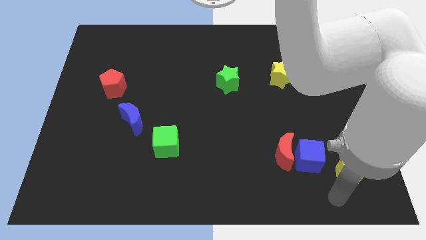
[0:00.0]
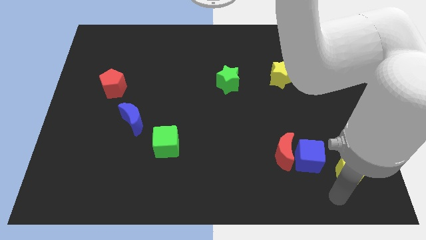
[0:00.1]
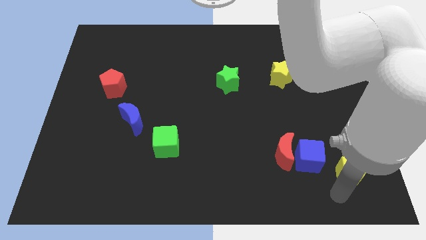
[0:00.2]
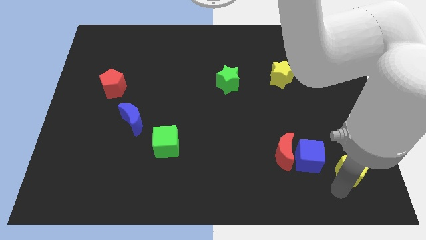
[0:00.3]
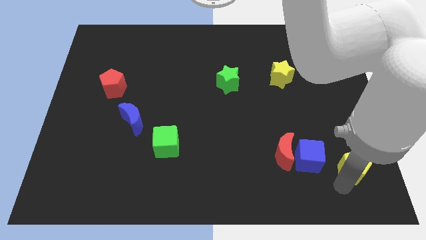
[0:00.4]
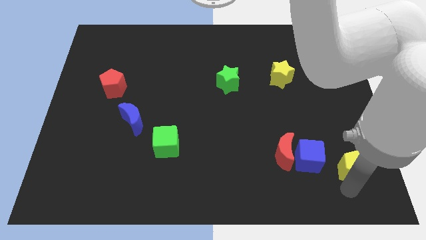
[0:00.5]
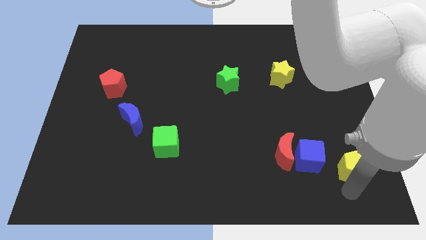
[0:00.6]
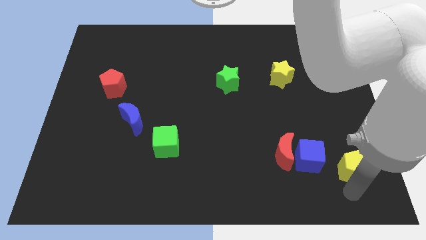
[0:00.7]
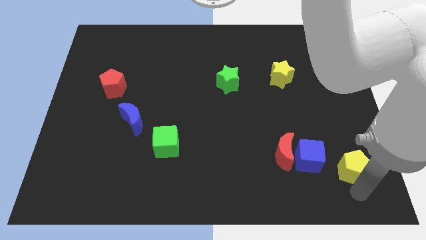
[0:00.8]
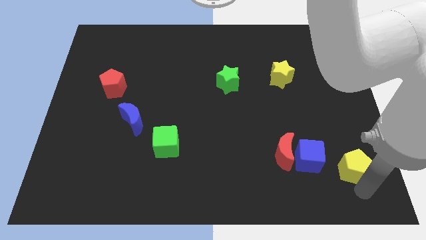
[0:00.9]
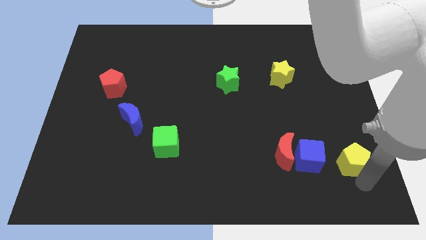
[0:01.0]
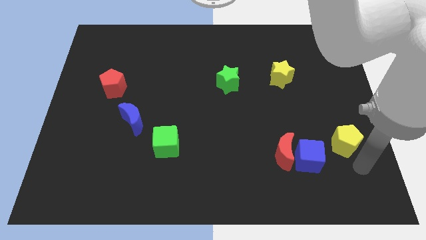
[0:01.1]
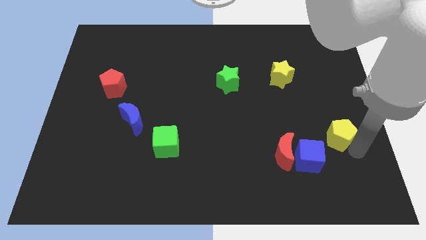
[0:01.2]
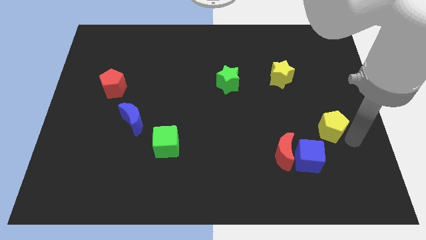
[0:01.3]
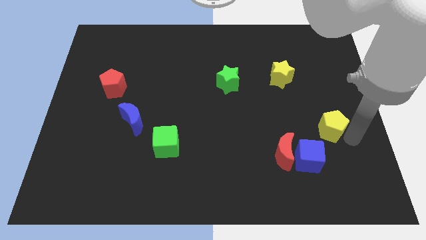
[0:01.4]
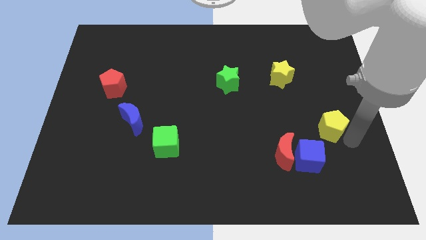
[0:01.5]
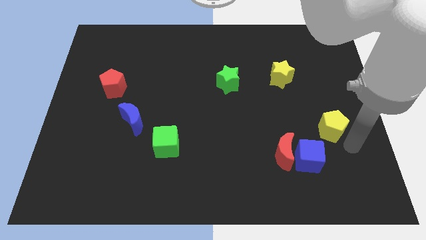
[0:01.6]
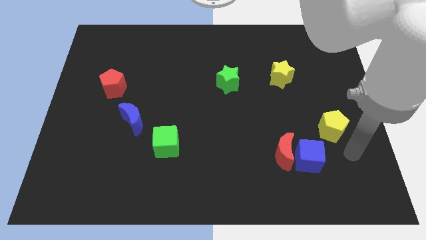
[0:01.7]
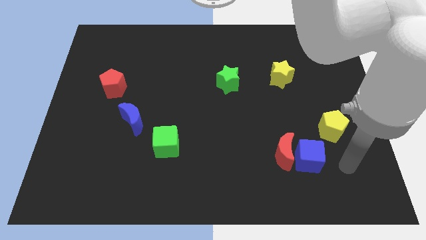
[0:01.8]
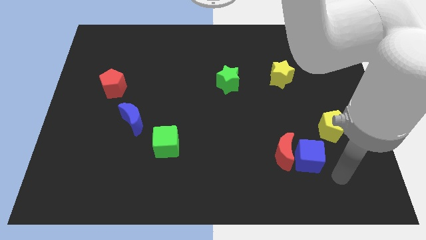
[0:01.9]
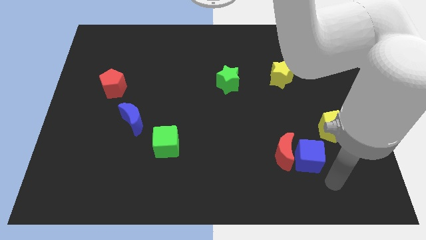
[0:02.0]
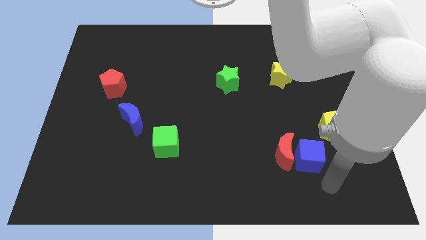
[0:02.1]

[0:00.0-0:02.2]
place the yellow pentagon on top right to blue cube

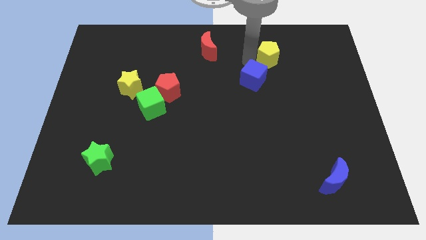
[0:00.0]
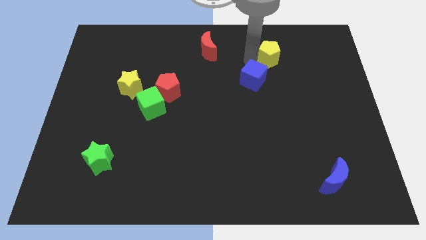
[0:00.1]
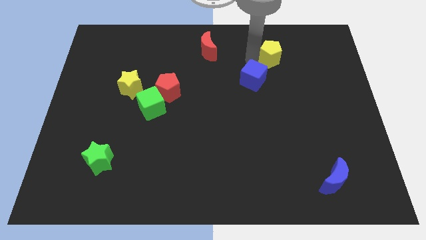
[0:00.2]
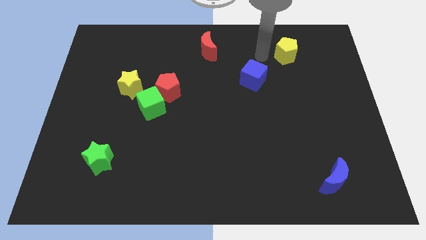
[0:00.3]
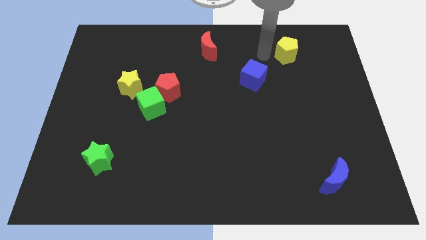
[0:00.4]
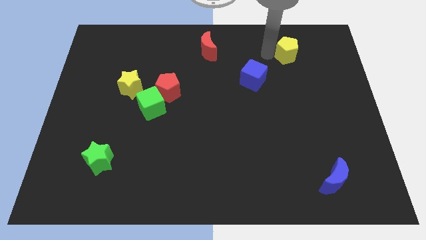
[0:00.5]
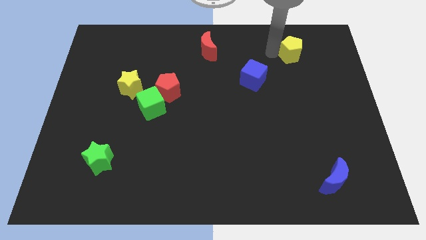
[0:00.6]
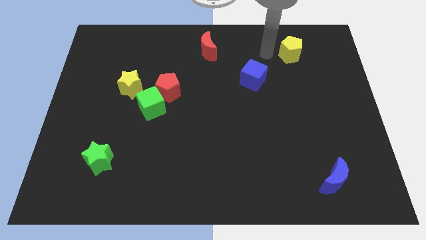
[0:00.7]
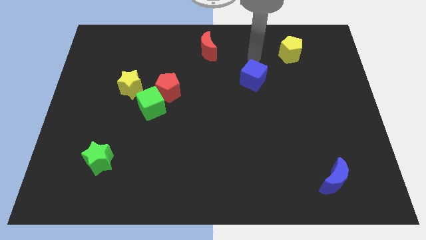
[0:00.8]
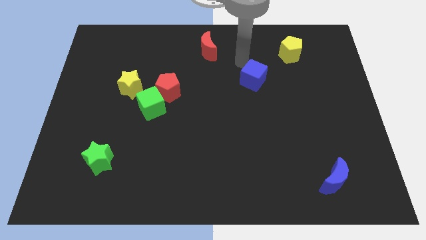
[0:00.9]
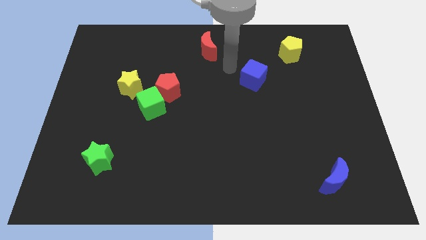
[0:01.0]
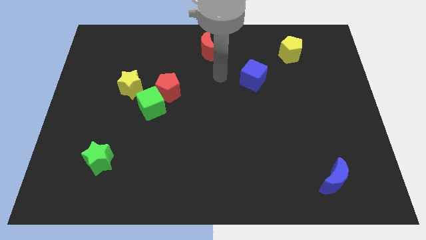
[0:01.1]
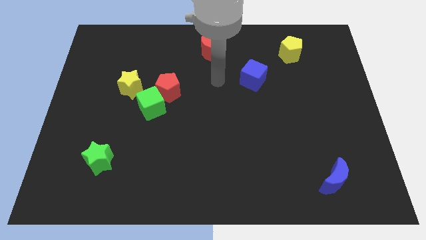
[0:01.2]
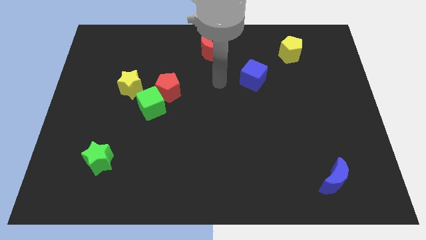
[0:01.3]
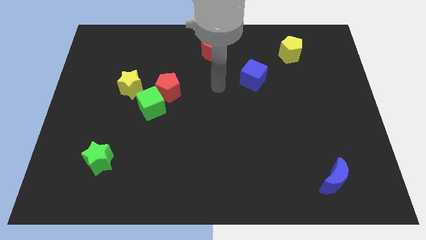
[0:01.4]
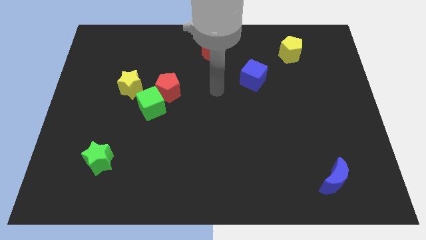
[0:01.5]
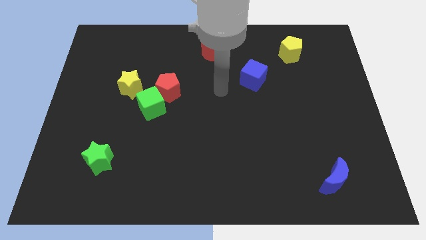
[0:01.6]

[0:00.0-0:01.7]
push the yellow pentagon slightly to the right

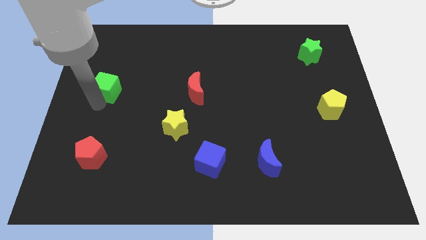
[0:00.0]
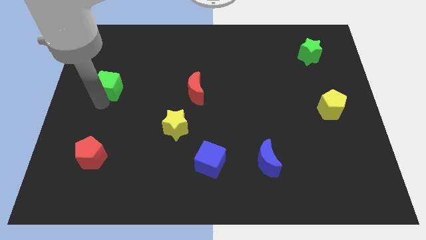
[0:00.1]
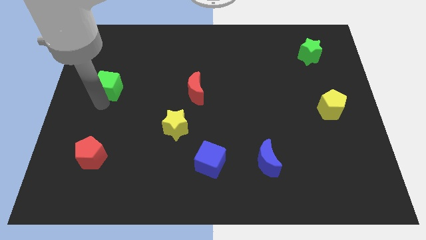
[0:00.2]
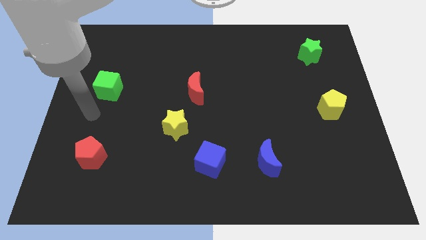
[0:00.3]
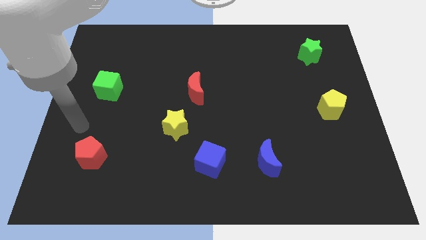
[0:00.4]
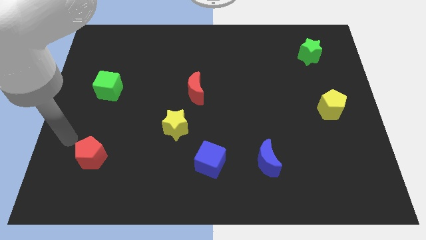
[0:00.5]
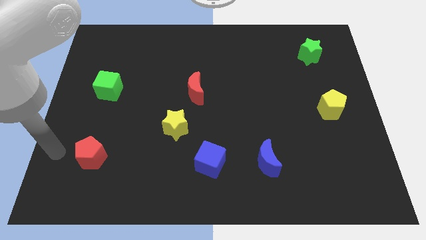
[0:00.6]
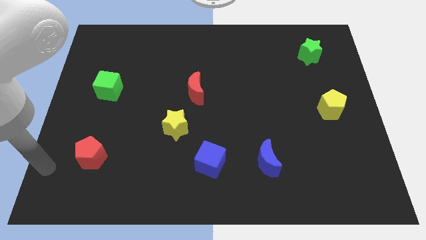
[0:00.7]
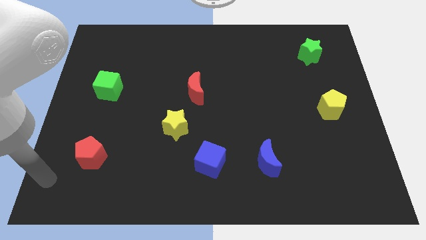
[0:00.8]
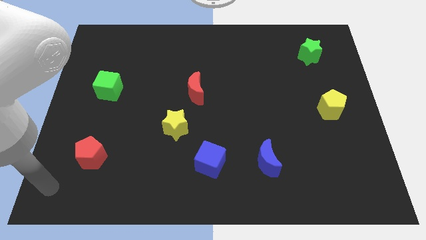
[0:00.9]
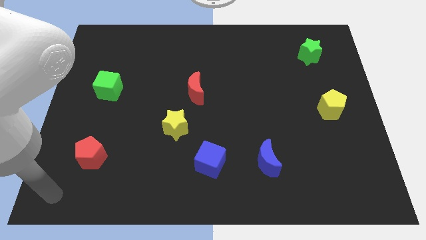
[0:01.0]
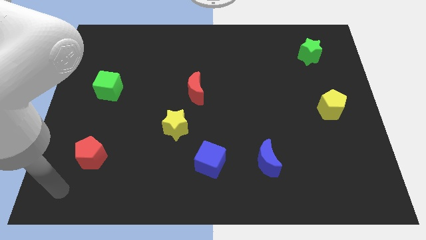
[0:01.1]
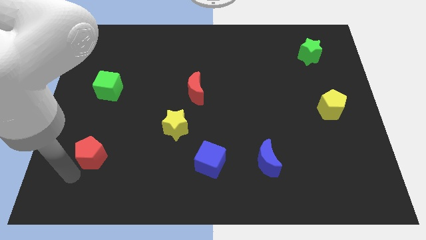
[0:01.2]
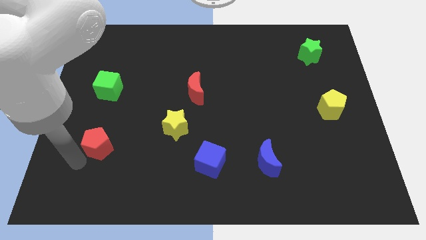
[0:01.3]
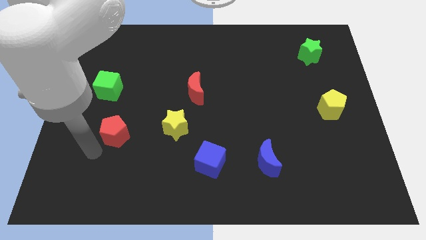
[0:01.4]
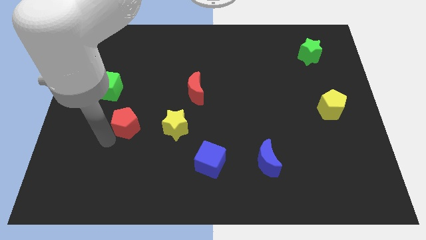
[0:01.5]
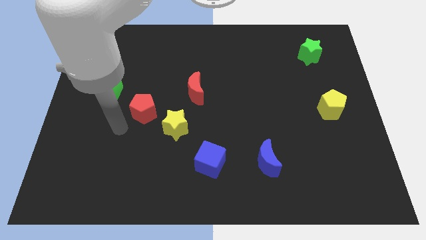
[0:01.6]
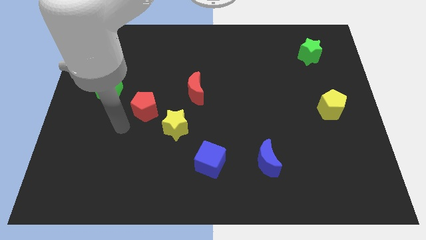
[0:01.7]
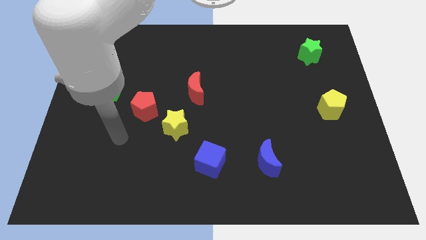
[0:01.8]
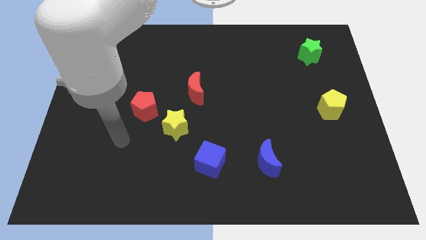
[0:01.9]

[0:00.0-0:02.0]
push the red pentagon diagonally to the top left to the yellow star

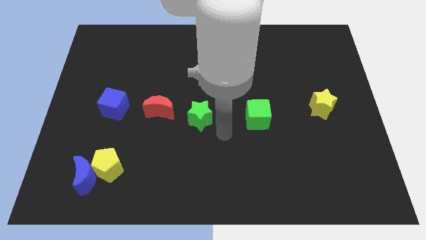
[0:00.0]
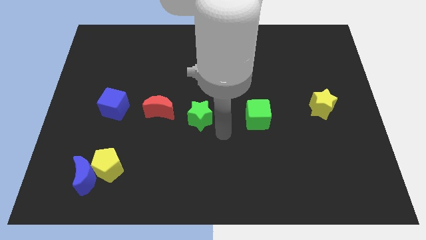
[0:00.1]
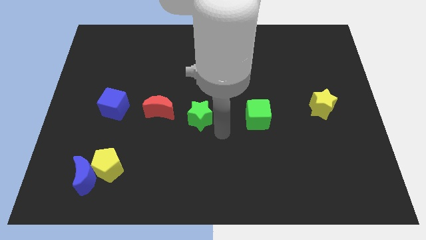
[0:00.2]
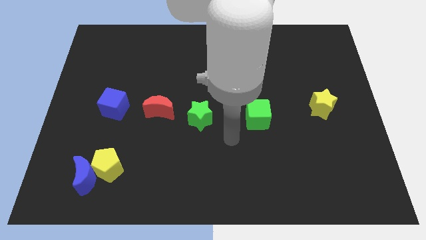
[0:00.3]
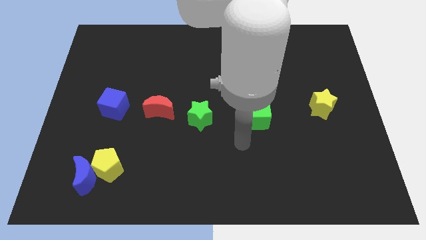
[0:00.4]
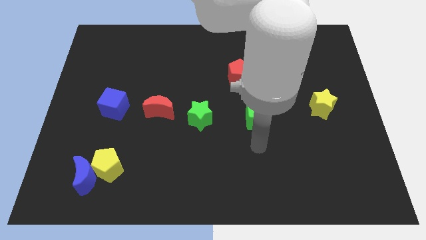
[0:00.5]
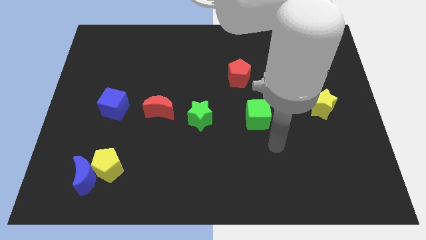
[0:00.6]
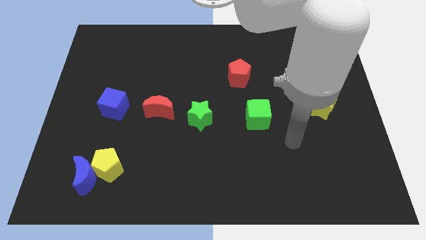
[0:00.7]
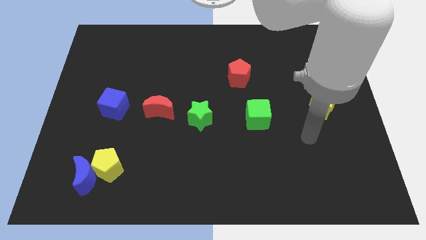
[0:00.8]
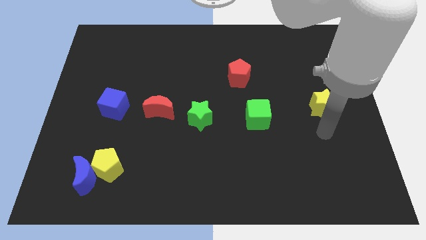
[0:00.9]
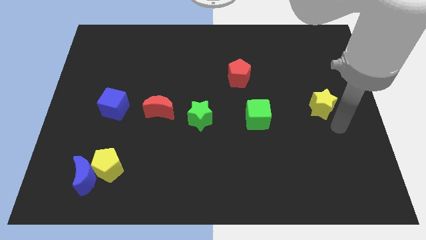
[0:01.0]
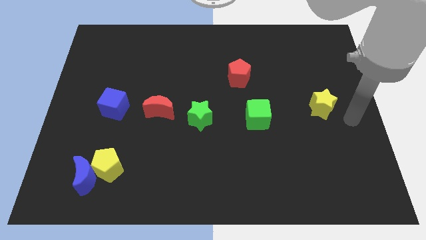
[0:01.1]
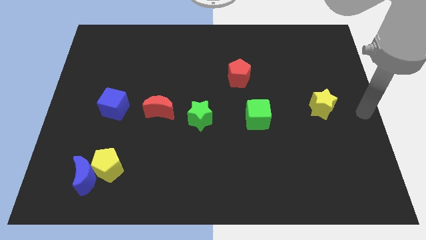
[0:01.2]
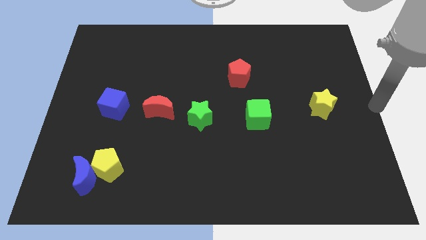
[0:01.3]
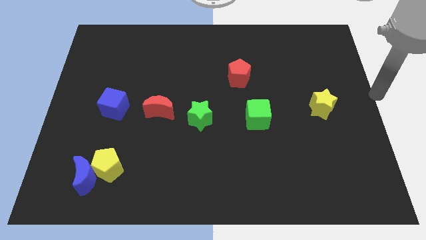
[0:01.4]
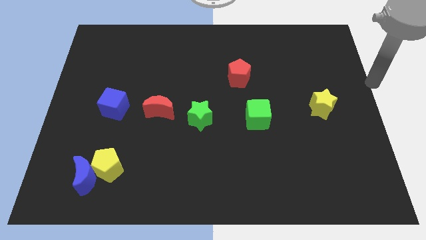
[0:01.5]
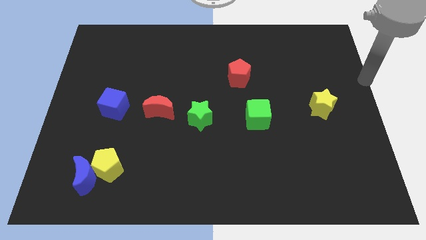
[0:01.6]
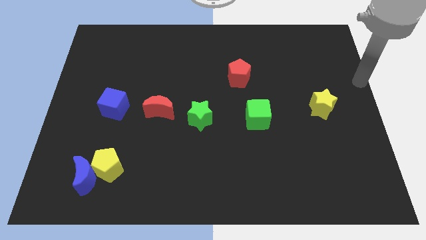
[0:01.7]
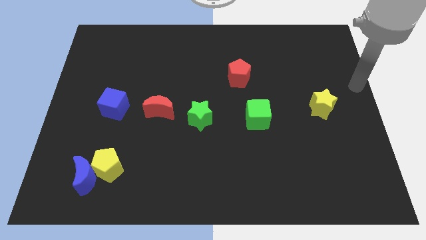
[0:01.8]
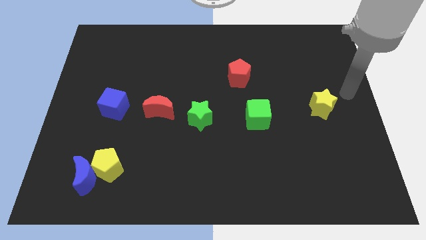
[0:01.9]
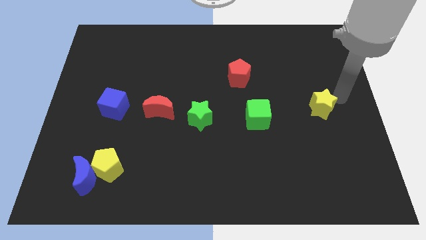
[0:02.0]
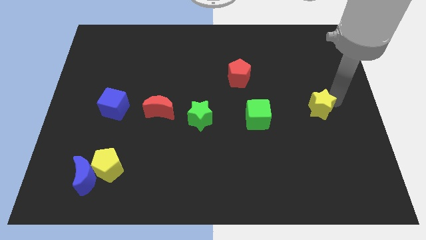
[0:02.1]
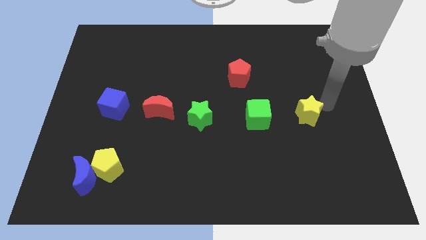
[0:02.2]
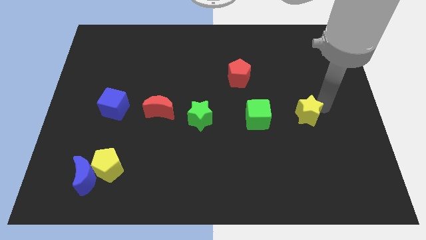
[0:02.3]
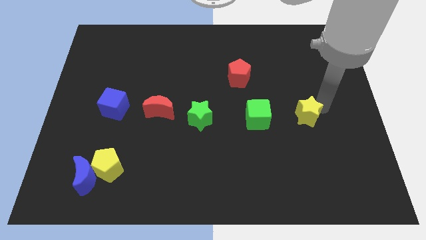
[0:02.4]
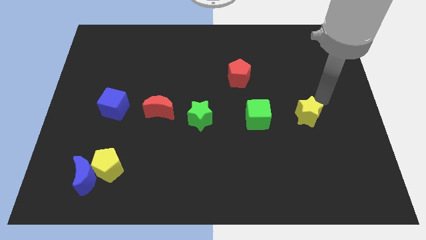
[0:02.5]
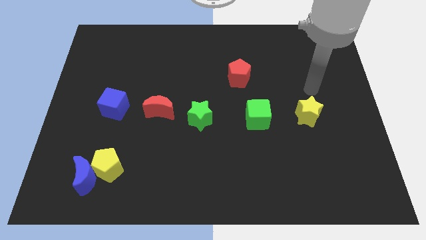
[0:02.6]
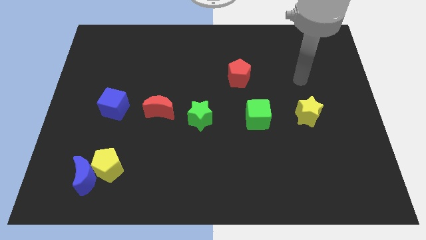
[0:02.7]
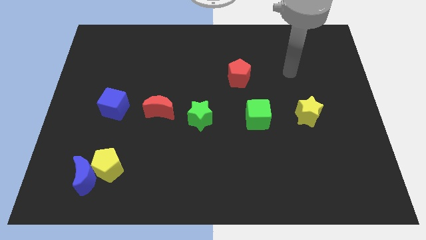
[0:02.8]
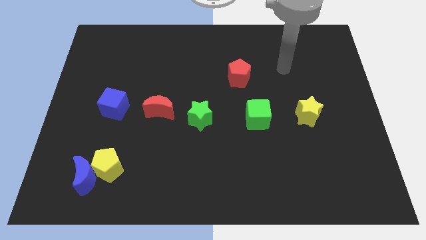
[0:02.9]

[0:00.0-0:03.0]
push the yellow star to the right of the green cube

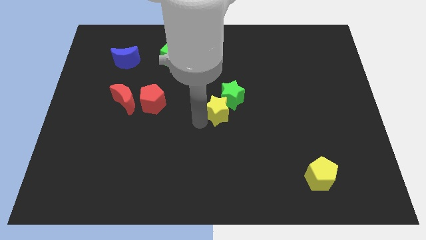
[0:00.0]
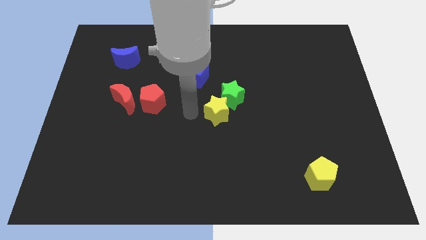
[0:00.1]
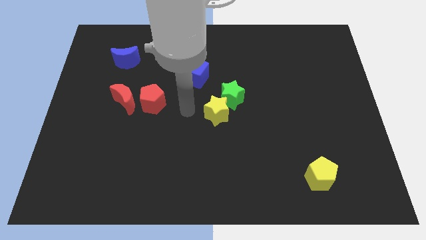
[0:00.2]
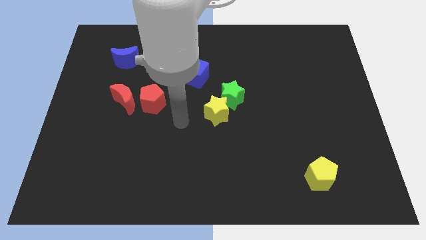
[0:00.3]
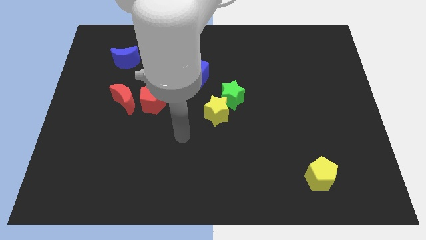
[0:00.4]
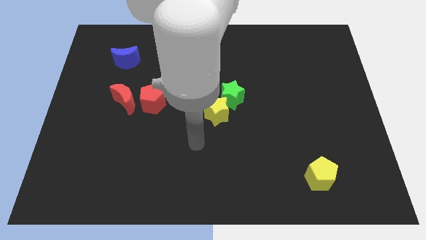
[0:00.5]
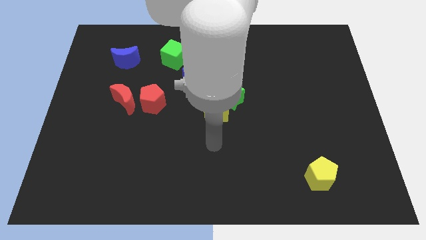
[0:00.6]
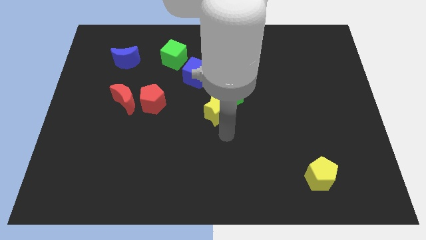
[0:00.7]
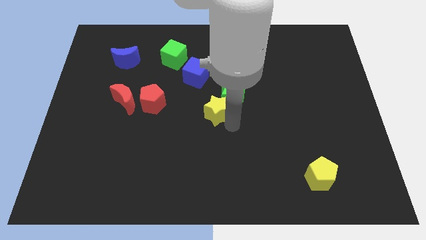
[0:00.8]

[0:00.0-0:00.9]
move your arm to the bottom of yellow star
